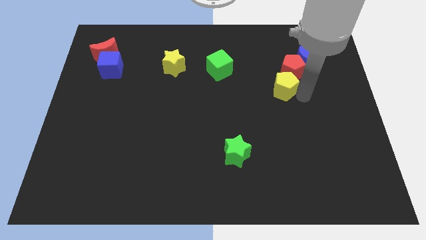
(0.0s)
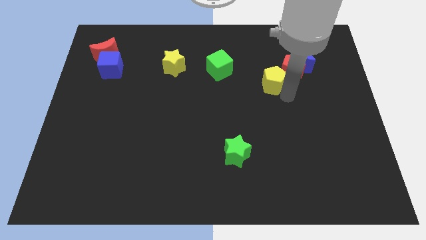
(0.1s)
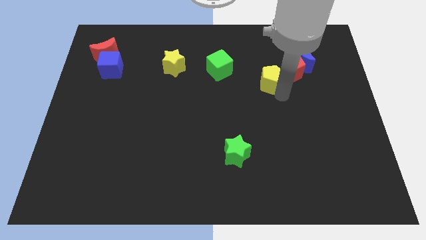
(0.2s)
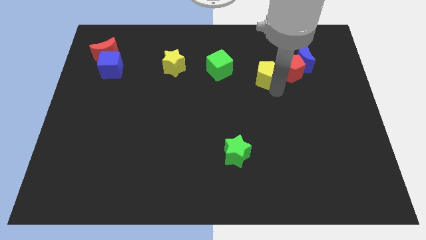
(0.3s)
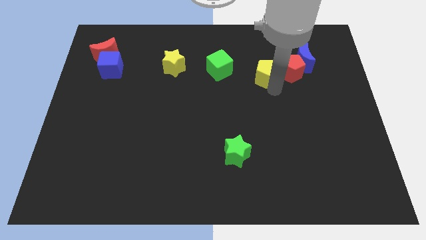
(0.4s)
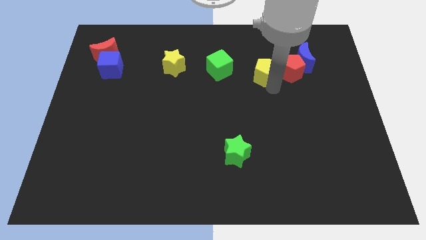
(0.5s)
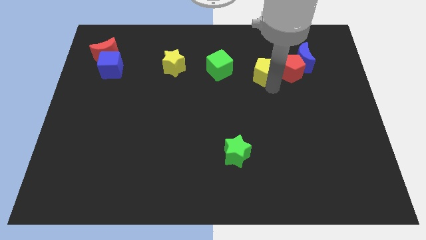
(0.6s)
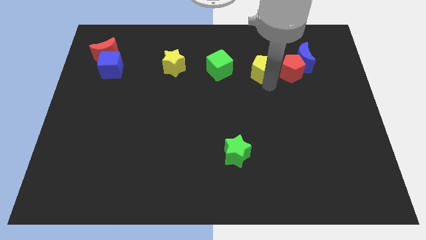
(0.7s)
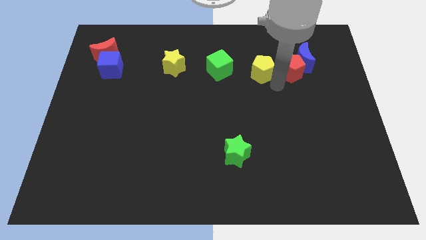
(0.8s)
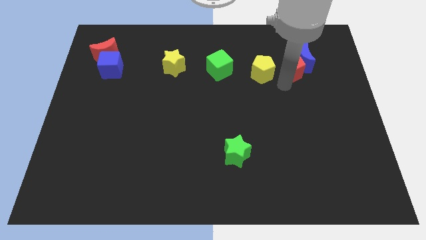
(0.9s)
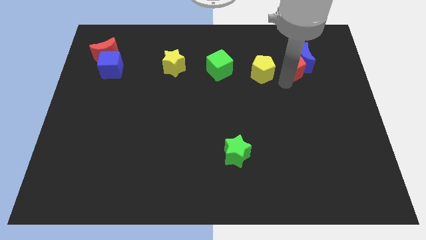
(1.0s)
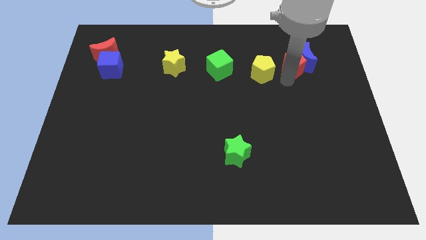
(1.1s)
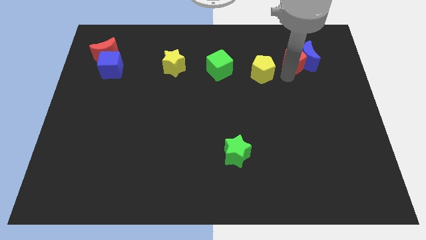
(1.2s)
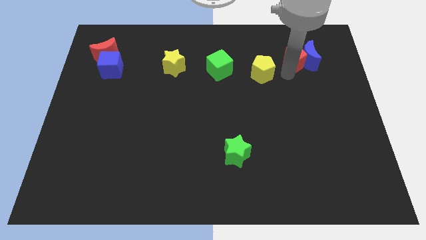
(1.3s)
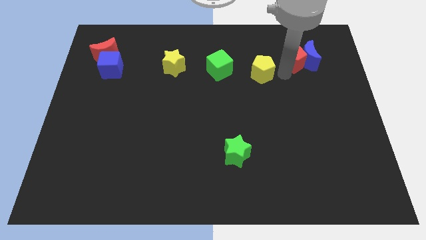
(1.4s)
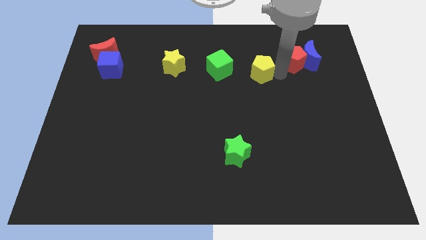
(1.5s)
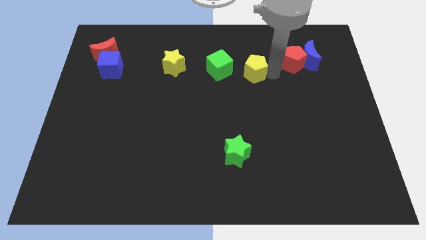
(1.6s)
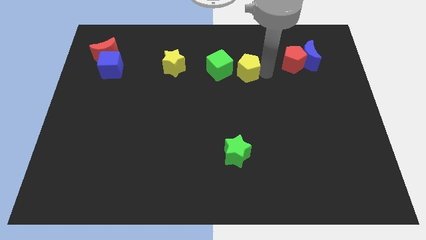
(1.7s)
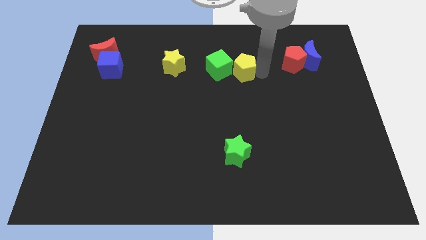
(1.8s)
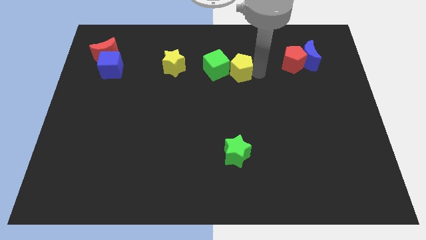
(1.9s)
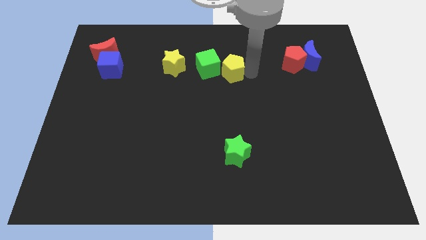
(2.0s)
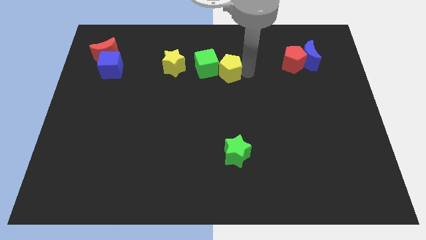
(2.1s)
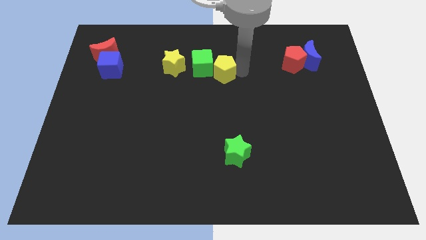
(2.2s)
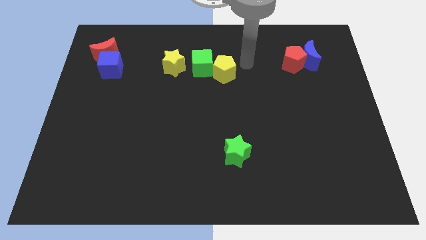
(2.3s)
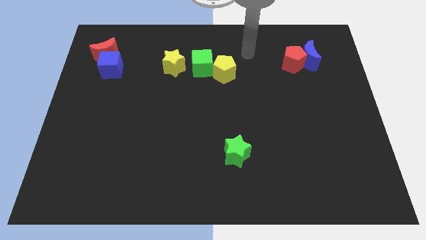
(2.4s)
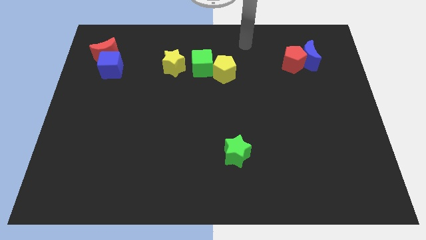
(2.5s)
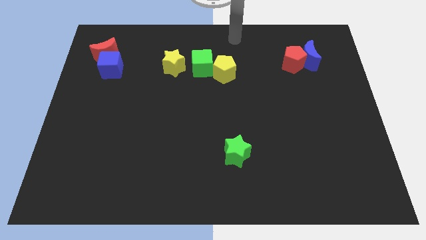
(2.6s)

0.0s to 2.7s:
push yellow pentagon near to green cube

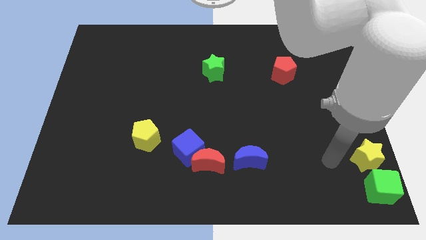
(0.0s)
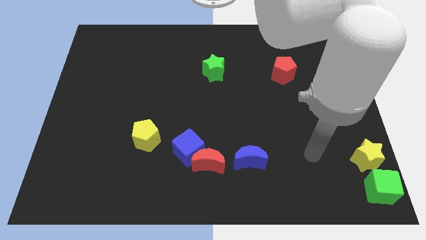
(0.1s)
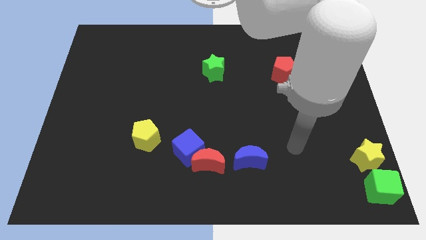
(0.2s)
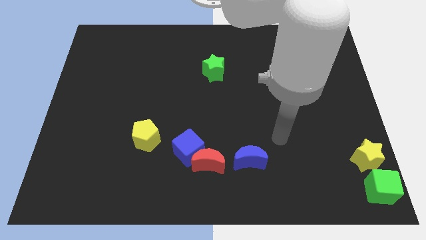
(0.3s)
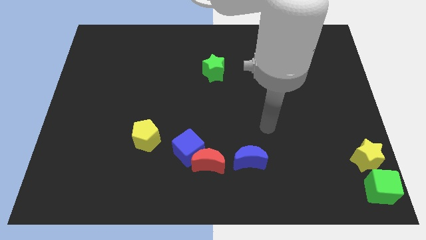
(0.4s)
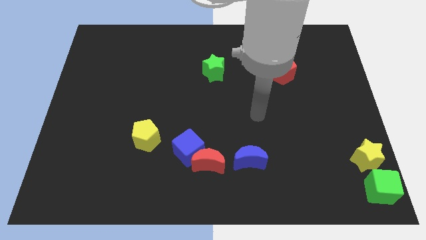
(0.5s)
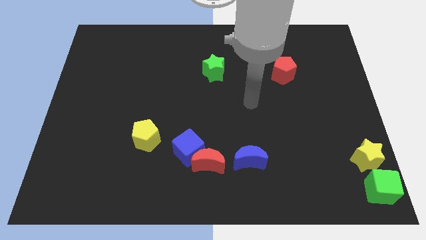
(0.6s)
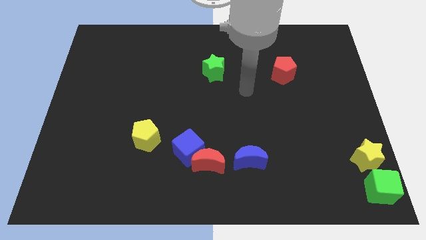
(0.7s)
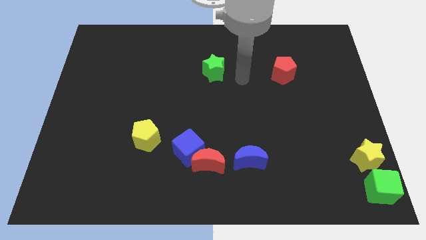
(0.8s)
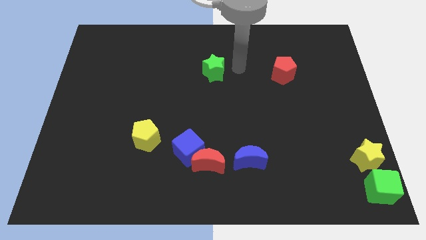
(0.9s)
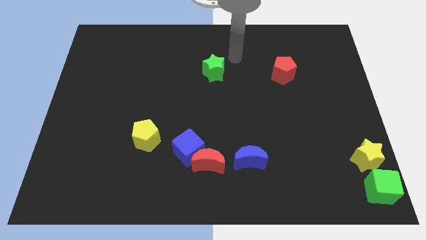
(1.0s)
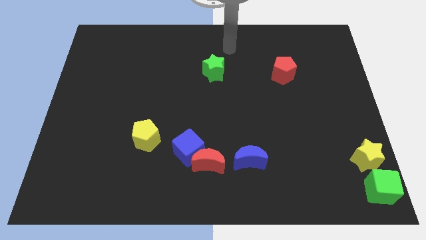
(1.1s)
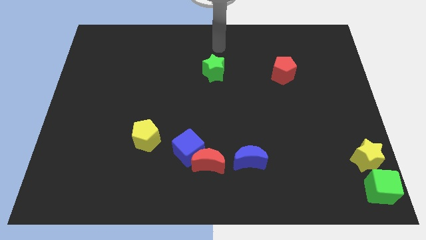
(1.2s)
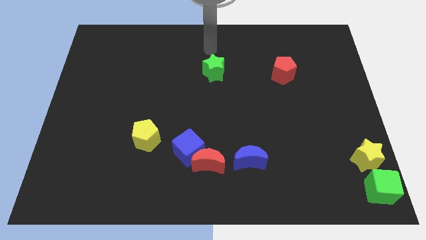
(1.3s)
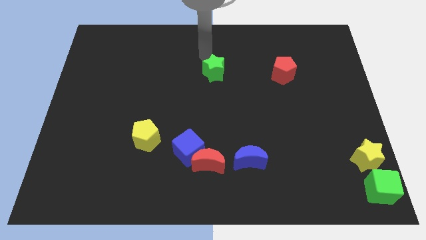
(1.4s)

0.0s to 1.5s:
point your arm at the top side of the green star

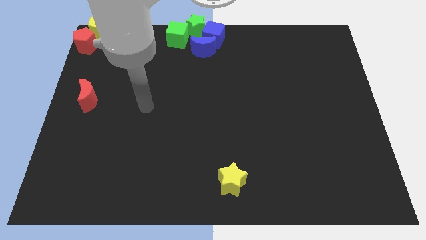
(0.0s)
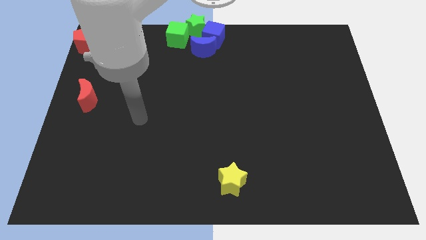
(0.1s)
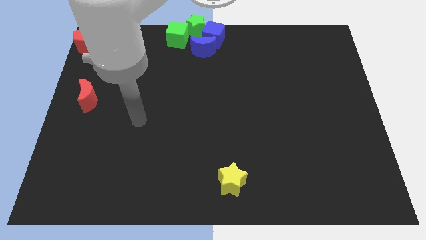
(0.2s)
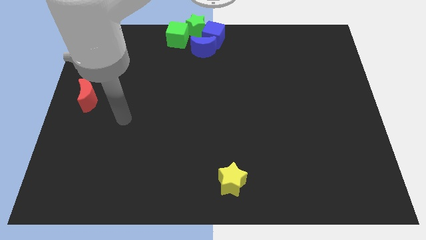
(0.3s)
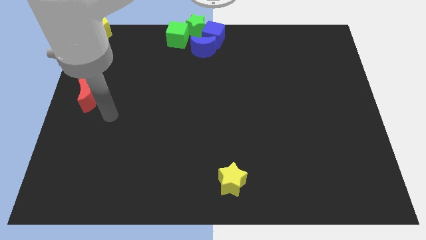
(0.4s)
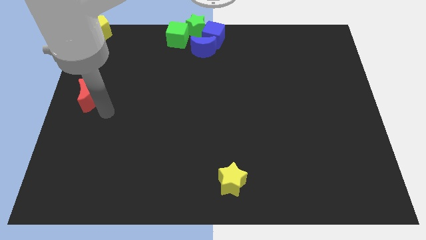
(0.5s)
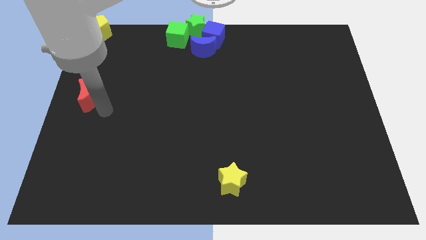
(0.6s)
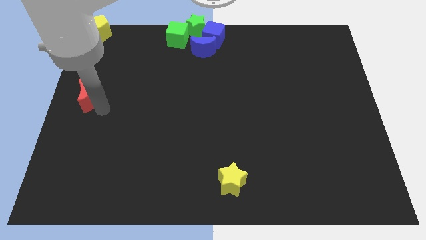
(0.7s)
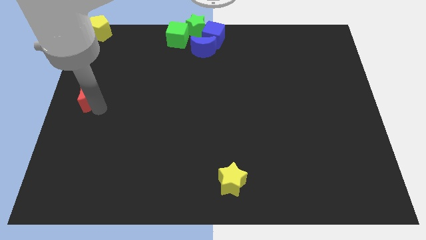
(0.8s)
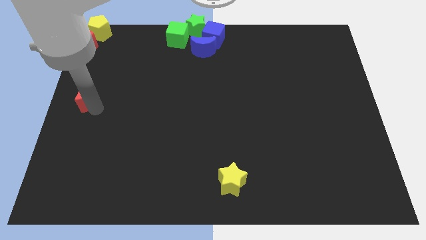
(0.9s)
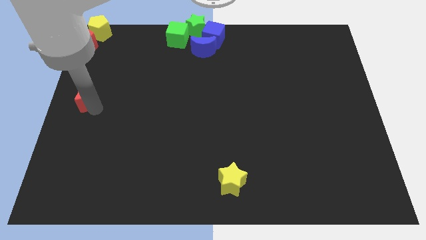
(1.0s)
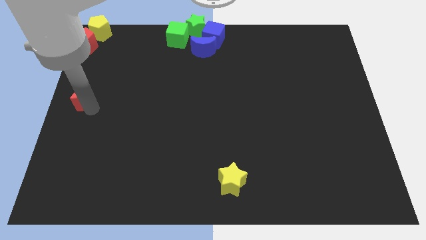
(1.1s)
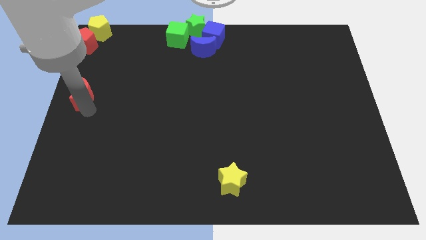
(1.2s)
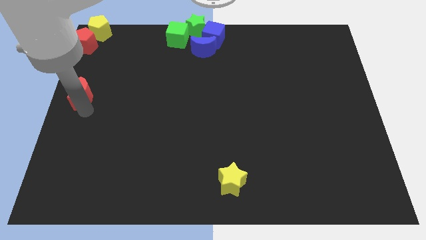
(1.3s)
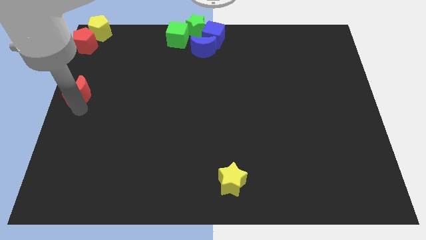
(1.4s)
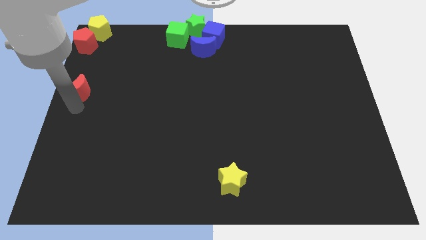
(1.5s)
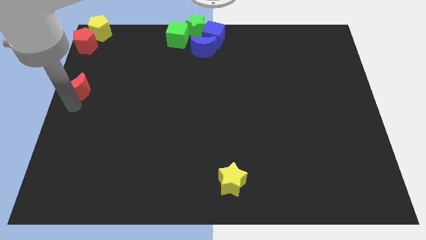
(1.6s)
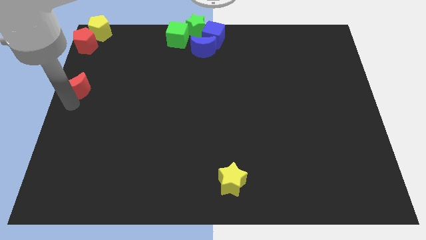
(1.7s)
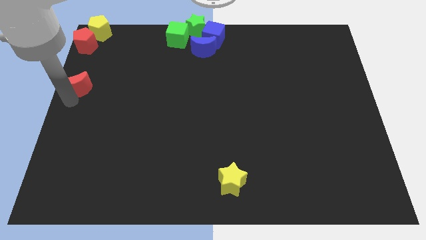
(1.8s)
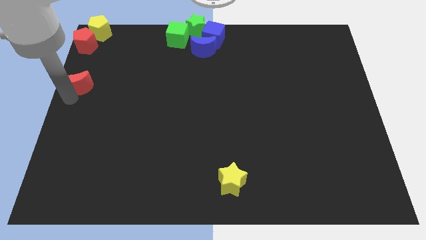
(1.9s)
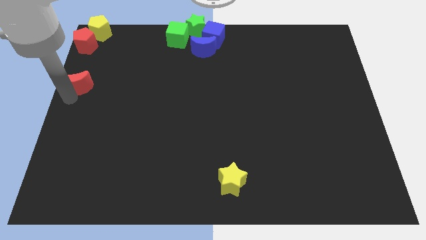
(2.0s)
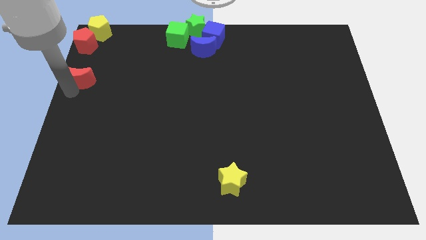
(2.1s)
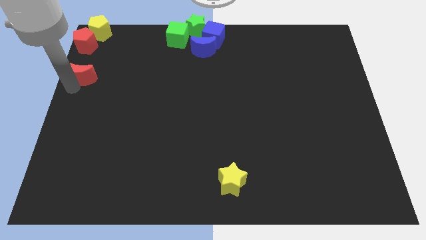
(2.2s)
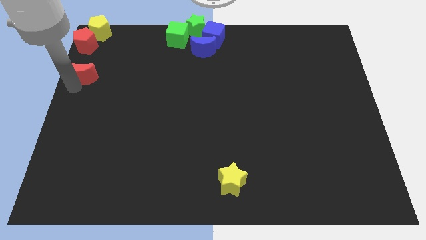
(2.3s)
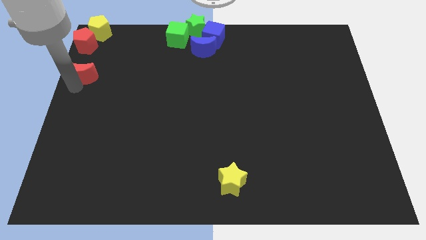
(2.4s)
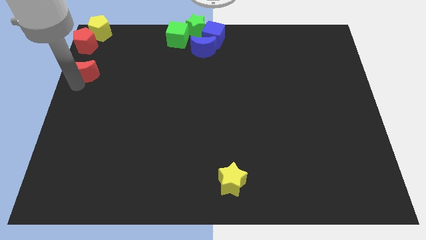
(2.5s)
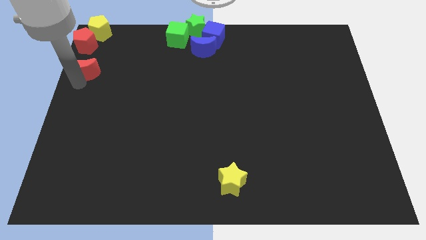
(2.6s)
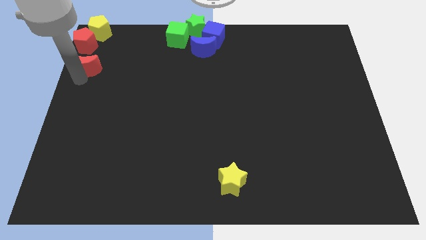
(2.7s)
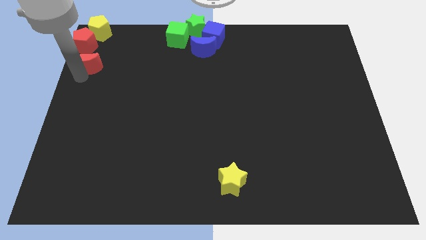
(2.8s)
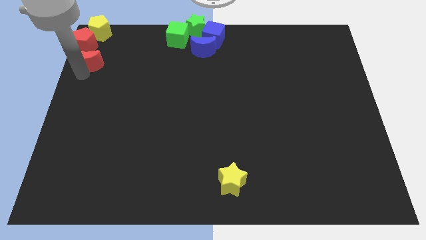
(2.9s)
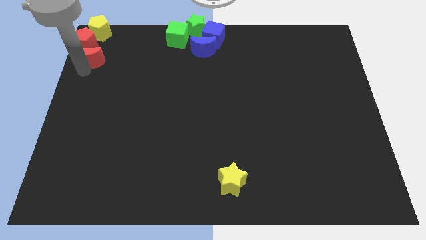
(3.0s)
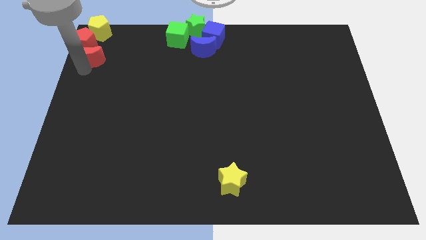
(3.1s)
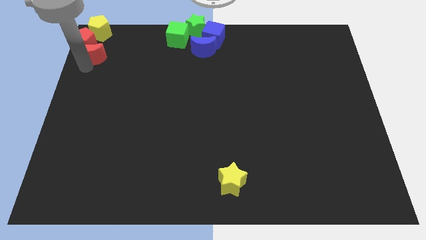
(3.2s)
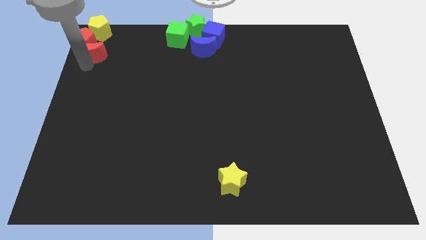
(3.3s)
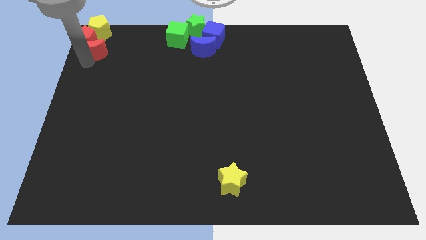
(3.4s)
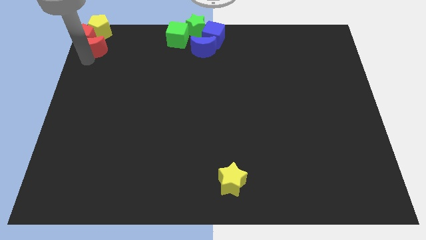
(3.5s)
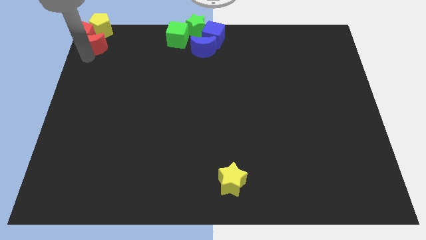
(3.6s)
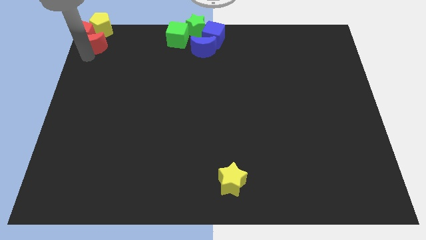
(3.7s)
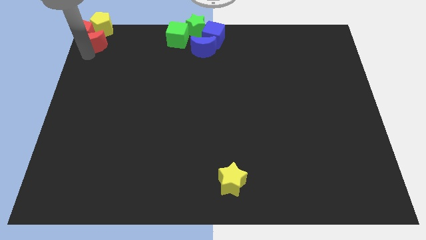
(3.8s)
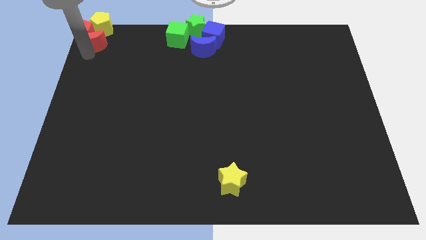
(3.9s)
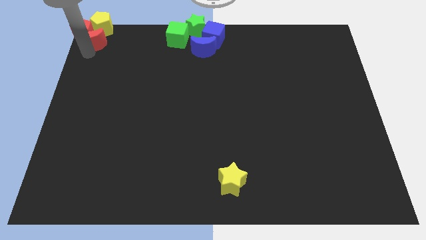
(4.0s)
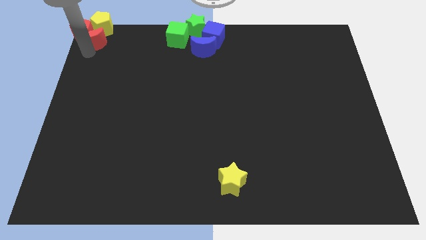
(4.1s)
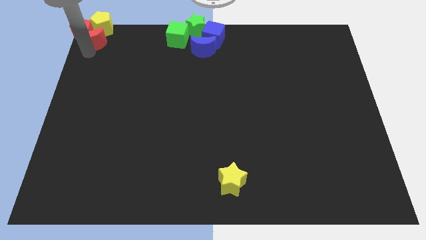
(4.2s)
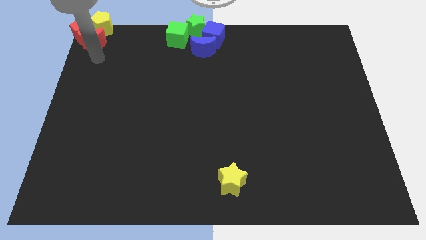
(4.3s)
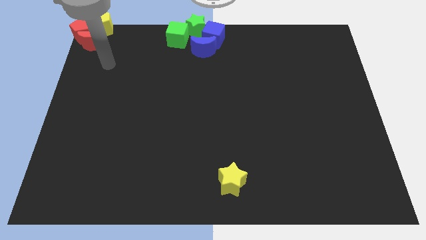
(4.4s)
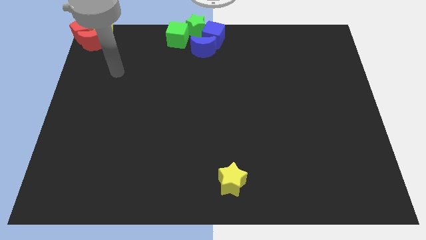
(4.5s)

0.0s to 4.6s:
drag the red moon to the top left corner of the board

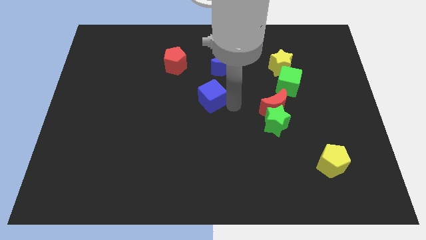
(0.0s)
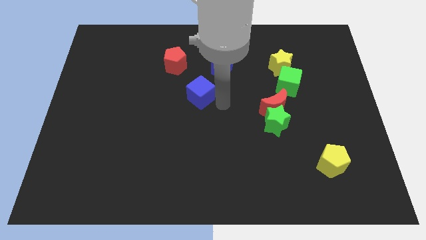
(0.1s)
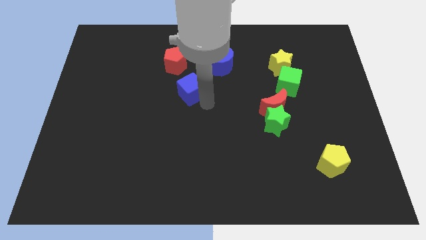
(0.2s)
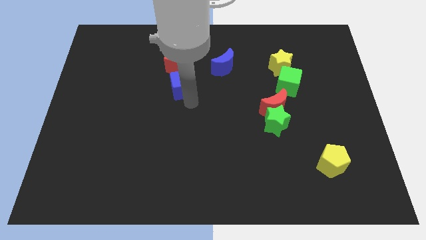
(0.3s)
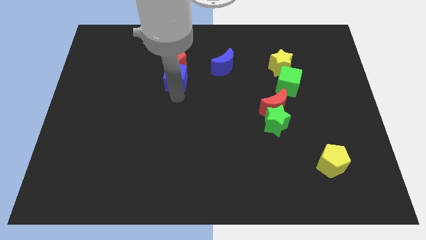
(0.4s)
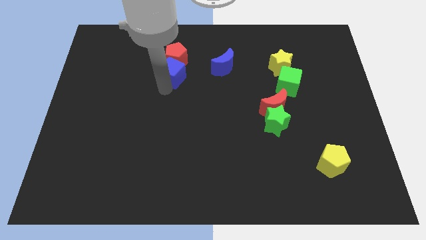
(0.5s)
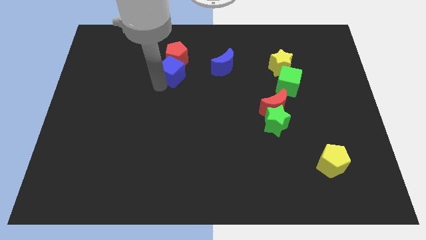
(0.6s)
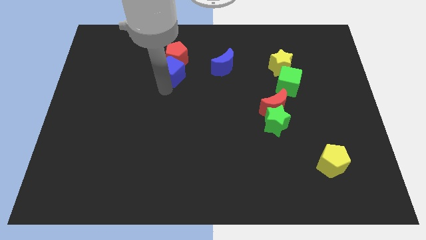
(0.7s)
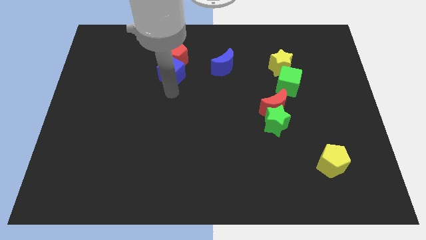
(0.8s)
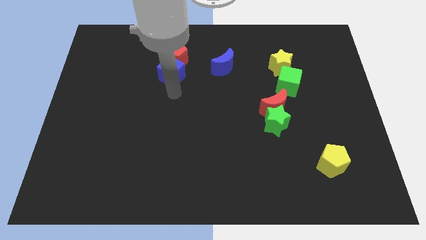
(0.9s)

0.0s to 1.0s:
push the blue cube into red pentagon
